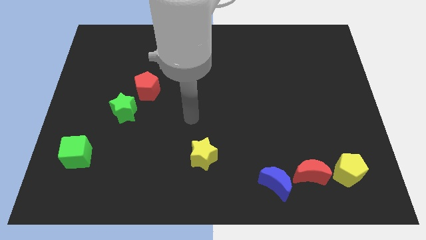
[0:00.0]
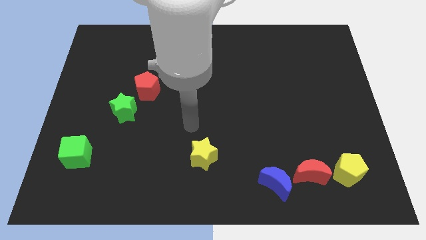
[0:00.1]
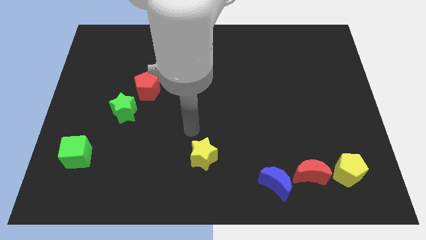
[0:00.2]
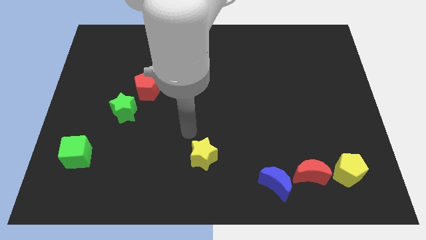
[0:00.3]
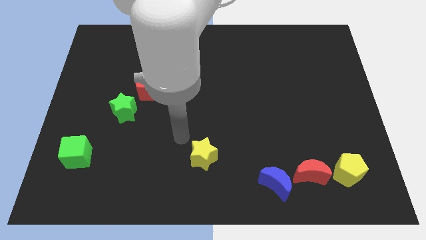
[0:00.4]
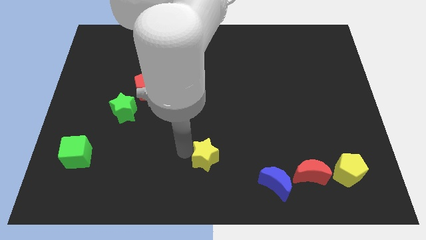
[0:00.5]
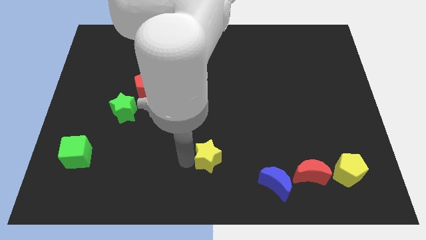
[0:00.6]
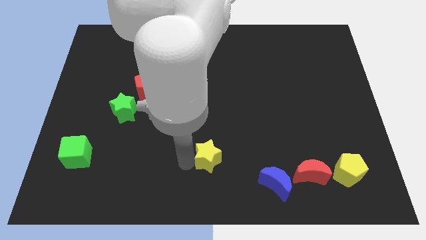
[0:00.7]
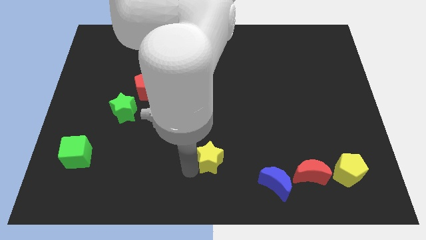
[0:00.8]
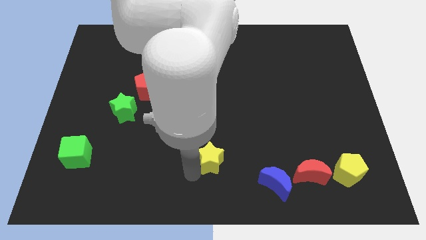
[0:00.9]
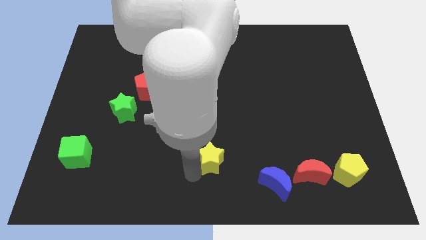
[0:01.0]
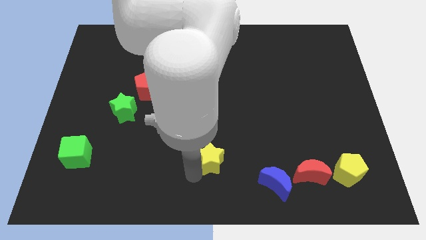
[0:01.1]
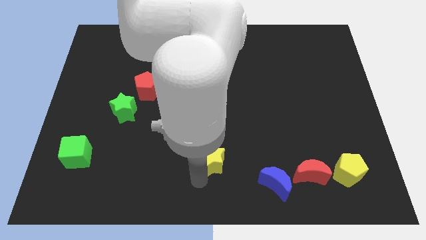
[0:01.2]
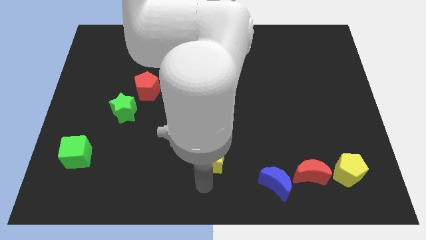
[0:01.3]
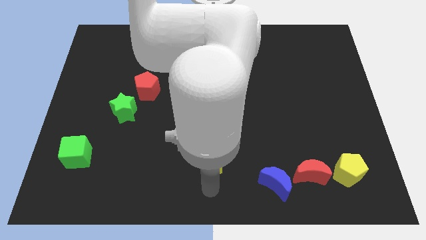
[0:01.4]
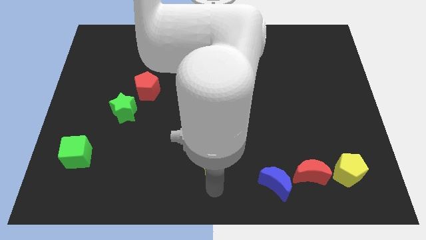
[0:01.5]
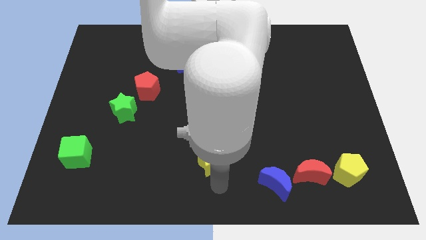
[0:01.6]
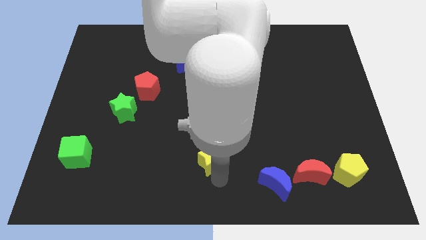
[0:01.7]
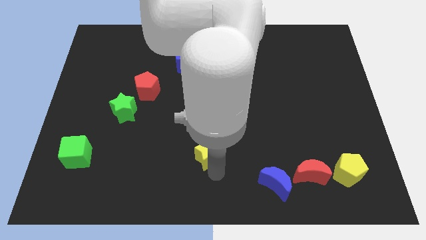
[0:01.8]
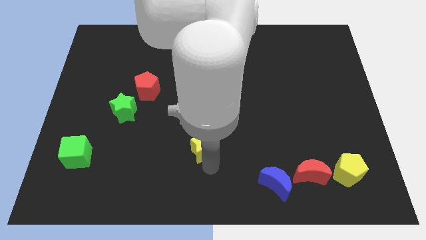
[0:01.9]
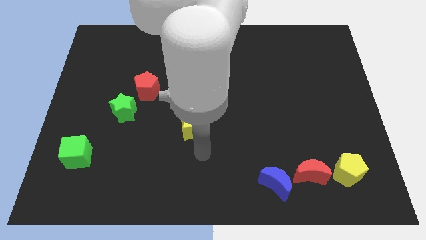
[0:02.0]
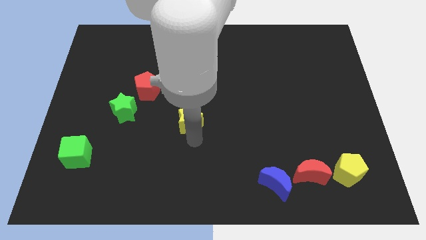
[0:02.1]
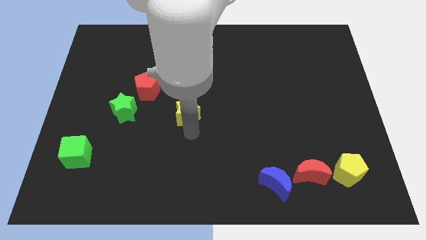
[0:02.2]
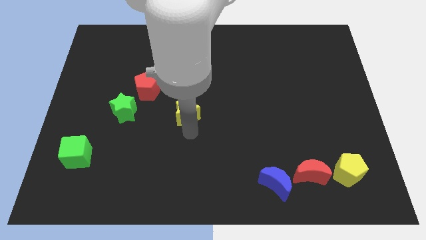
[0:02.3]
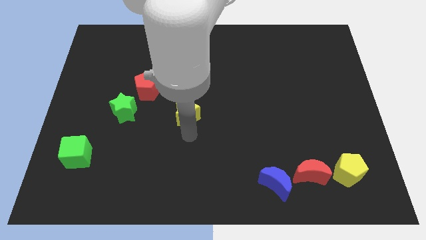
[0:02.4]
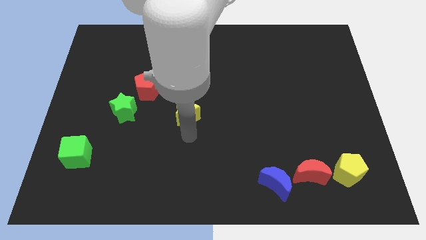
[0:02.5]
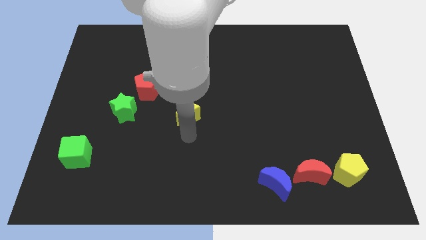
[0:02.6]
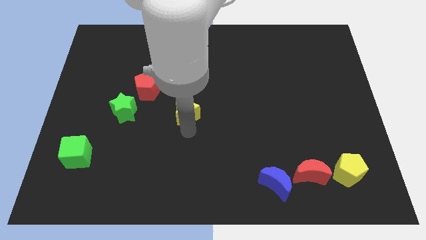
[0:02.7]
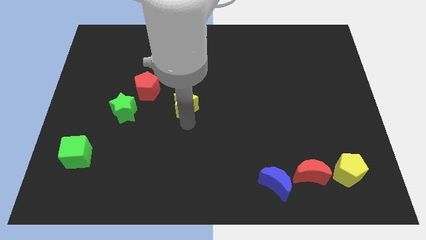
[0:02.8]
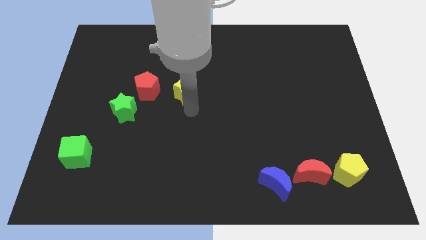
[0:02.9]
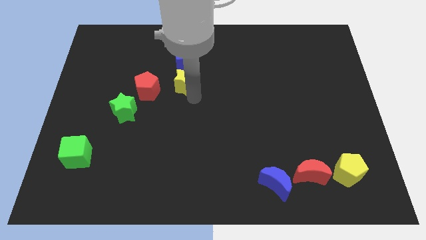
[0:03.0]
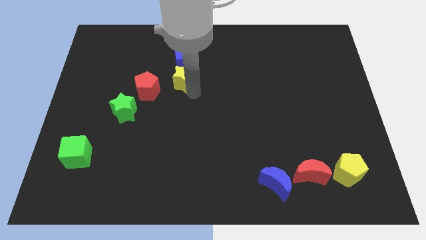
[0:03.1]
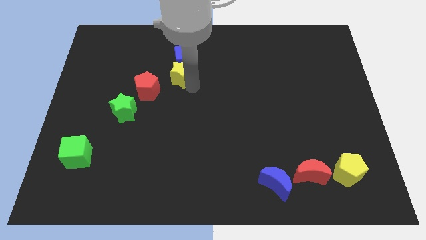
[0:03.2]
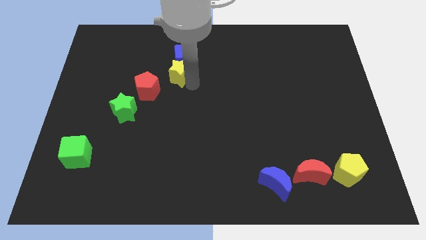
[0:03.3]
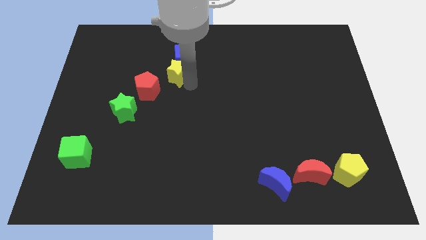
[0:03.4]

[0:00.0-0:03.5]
push the yellow star to the bottom of the blue cube

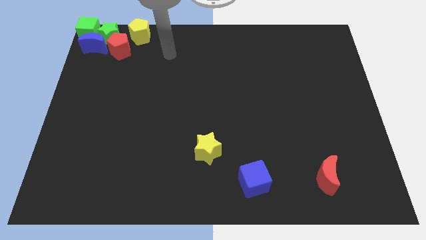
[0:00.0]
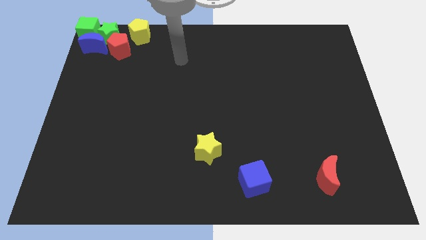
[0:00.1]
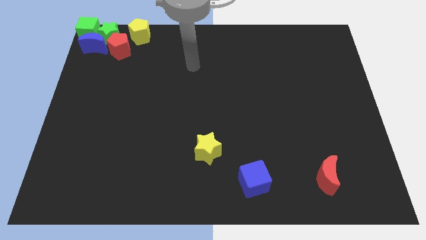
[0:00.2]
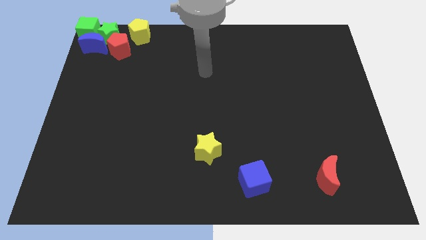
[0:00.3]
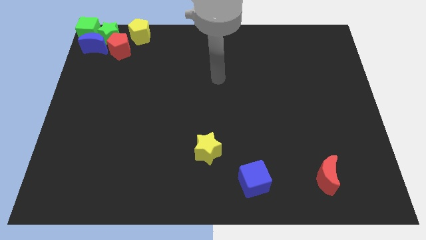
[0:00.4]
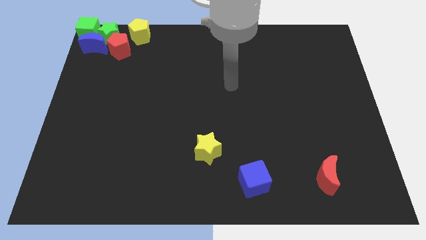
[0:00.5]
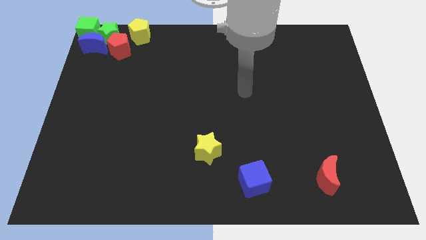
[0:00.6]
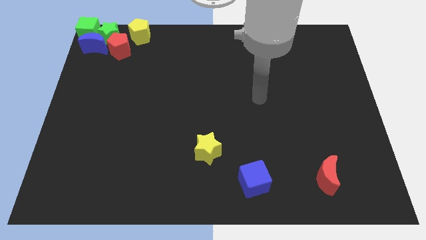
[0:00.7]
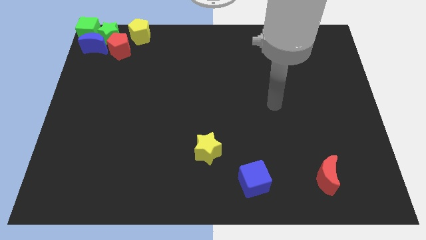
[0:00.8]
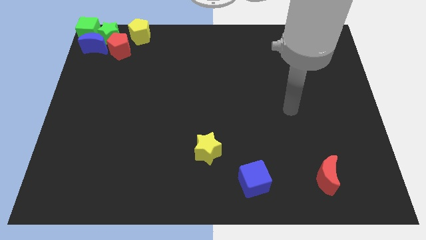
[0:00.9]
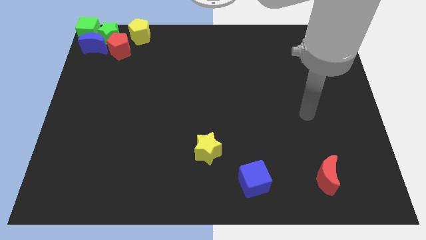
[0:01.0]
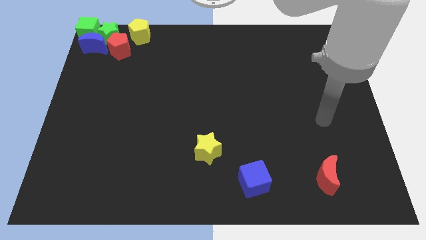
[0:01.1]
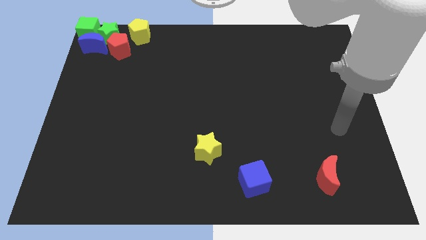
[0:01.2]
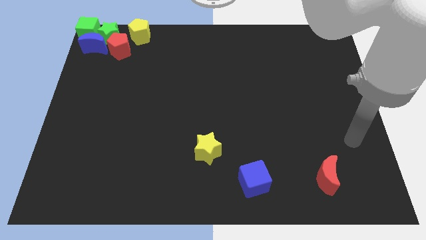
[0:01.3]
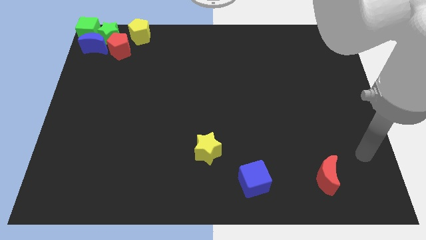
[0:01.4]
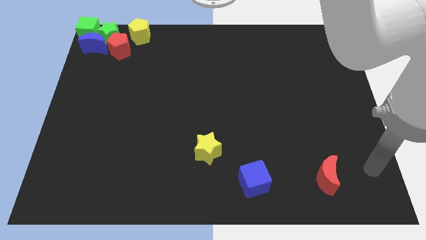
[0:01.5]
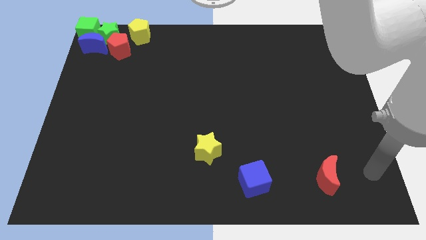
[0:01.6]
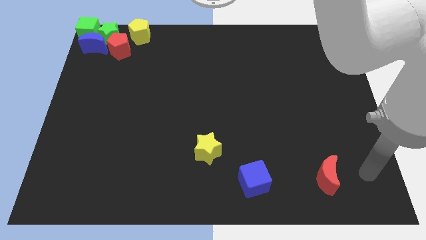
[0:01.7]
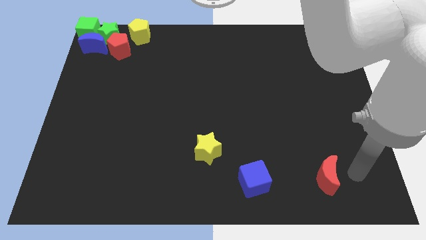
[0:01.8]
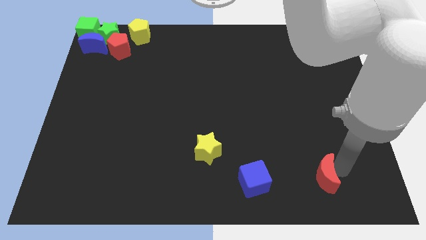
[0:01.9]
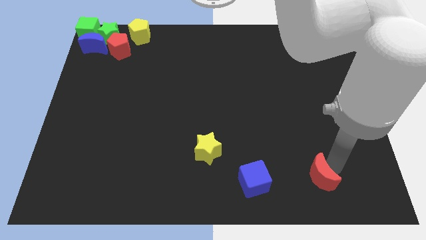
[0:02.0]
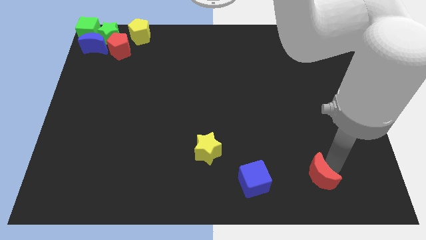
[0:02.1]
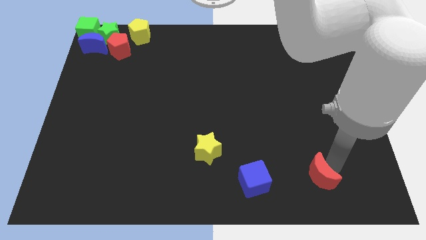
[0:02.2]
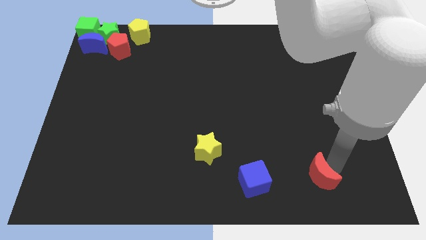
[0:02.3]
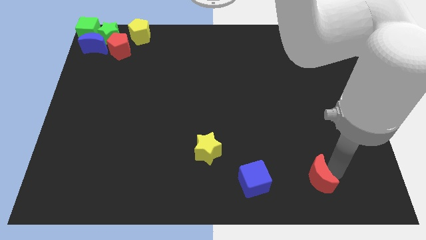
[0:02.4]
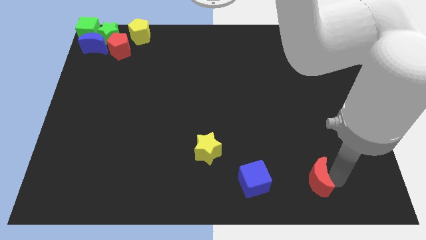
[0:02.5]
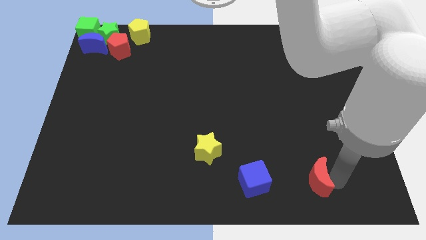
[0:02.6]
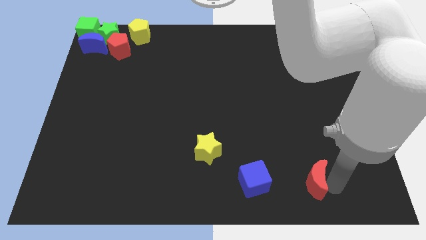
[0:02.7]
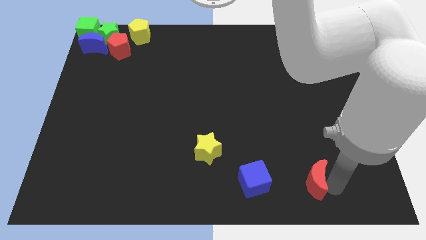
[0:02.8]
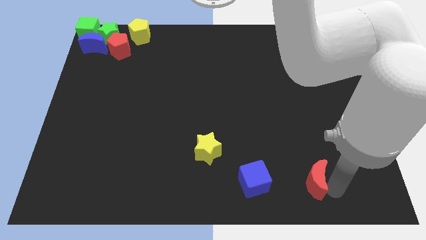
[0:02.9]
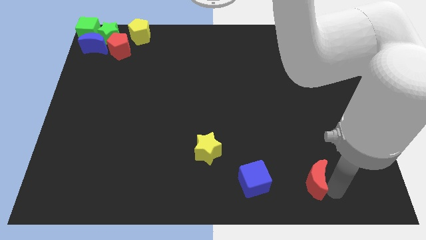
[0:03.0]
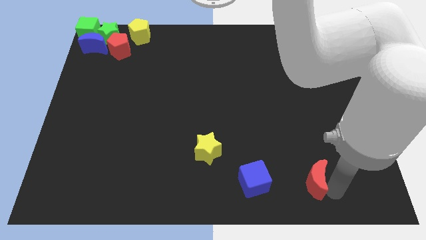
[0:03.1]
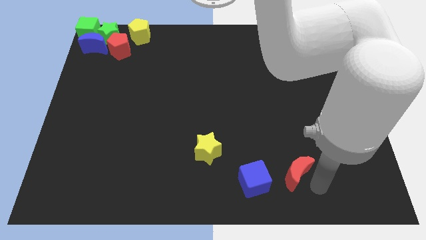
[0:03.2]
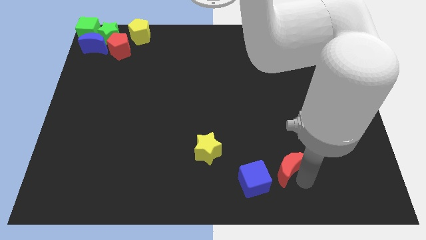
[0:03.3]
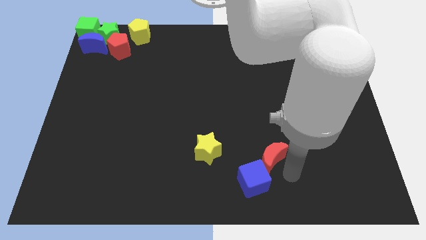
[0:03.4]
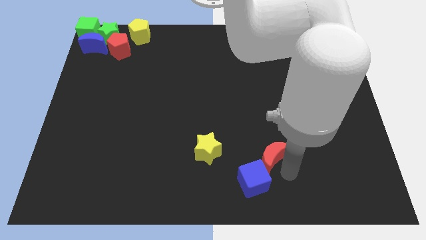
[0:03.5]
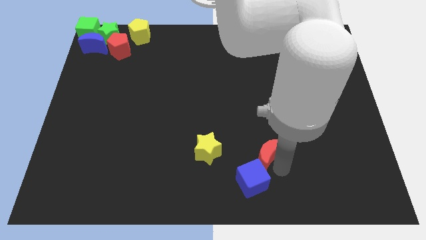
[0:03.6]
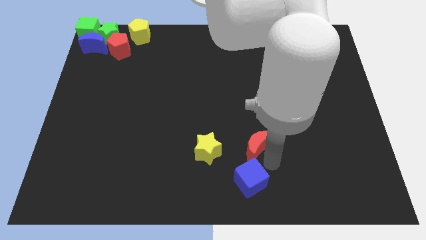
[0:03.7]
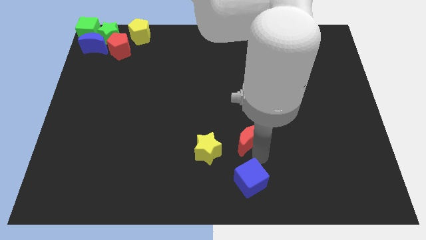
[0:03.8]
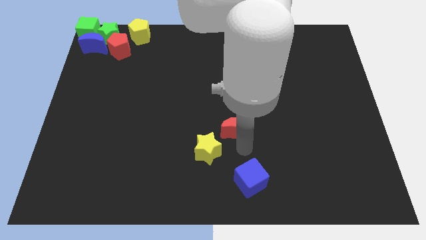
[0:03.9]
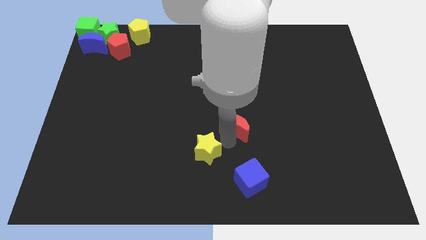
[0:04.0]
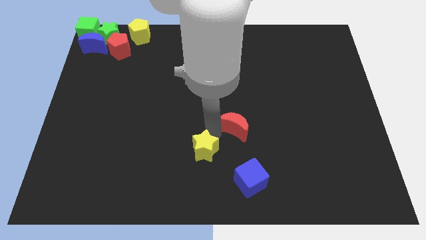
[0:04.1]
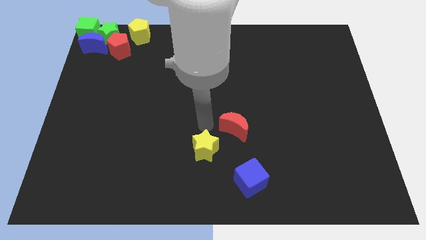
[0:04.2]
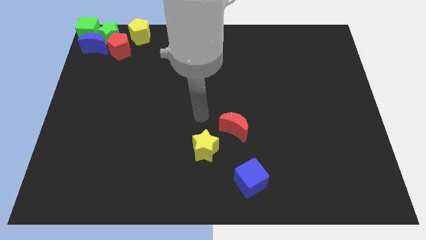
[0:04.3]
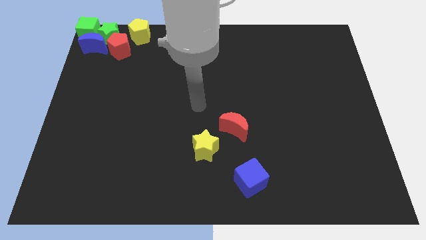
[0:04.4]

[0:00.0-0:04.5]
slide the red crescent towards the top right side of the yellow star

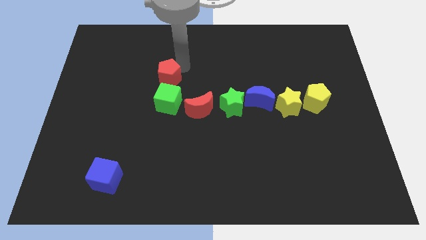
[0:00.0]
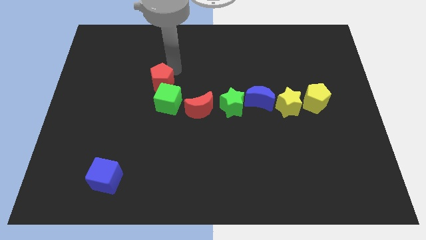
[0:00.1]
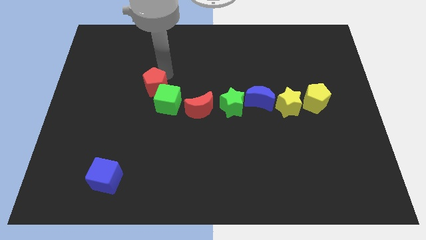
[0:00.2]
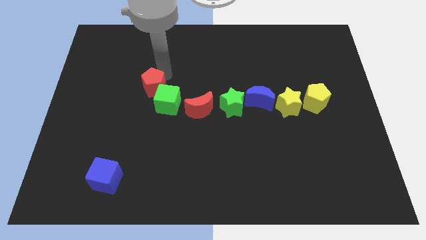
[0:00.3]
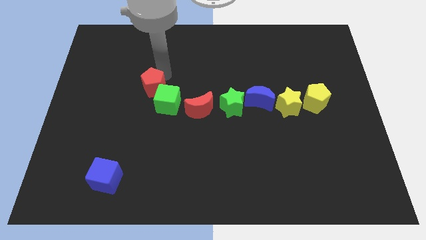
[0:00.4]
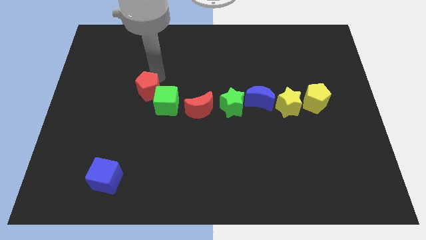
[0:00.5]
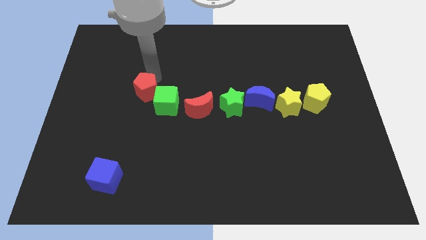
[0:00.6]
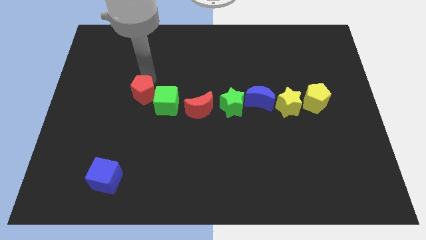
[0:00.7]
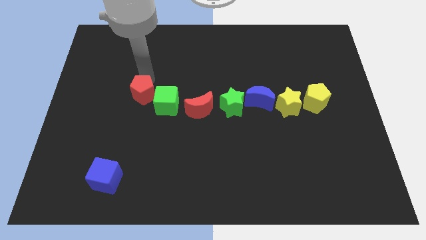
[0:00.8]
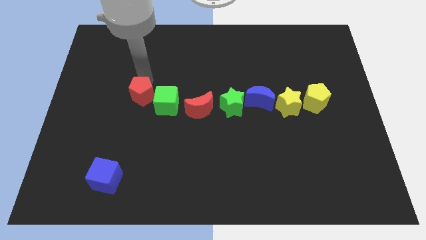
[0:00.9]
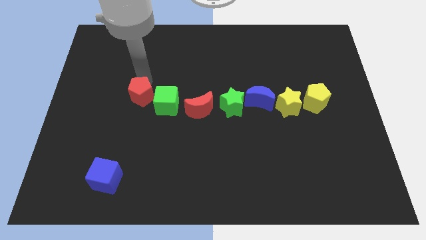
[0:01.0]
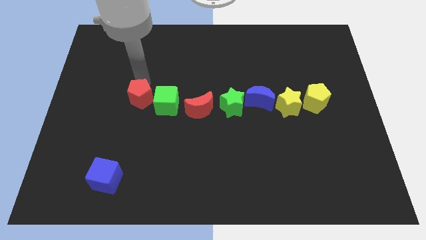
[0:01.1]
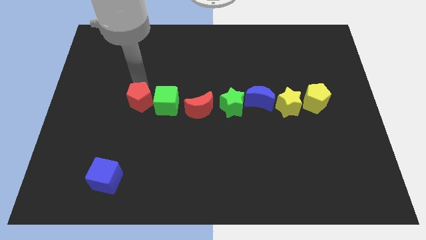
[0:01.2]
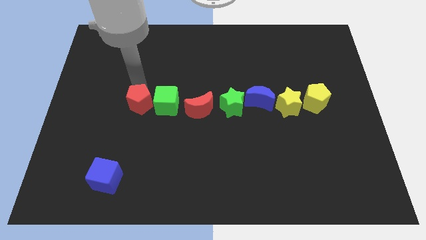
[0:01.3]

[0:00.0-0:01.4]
place the red pentagon left to the green cube
